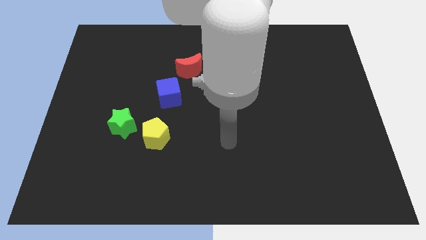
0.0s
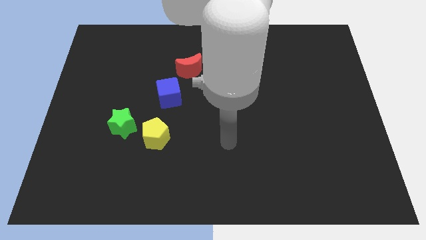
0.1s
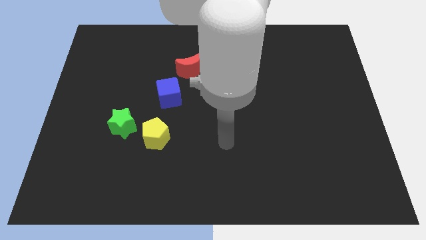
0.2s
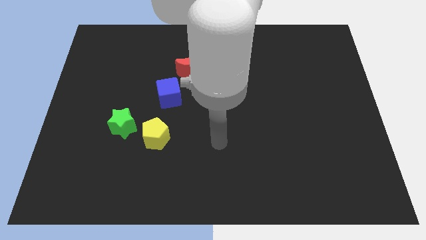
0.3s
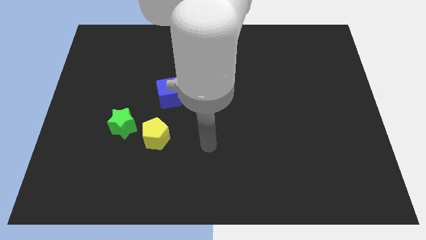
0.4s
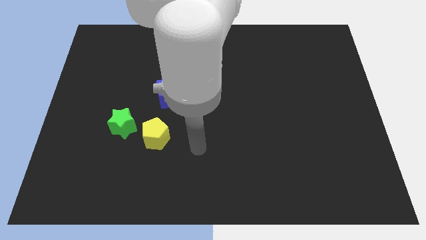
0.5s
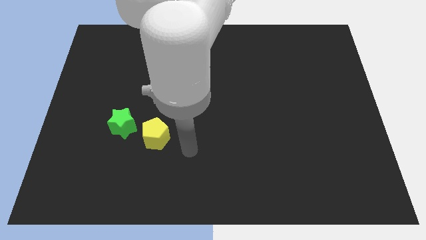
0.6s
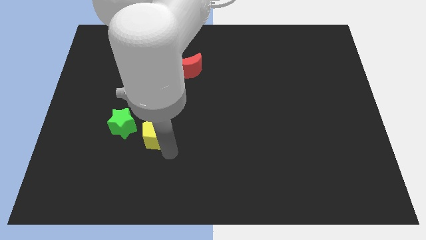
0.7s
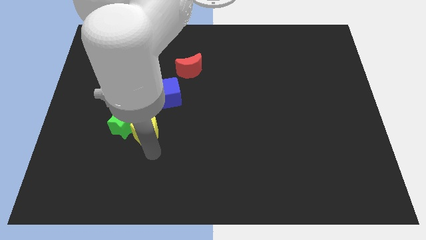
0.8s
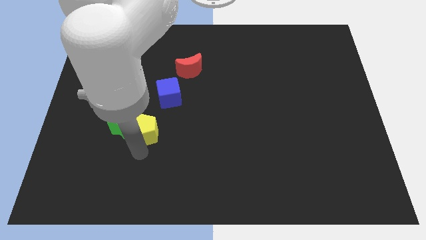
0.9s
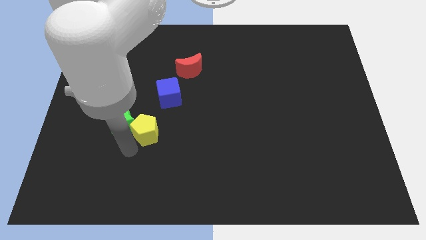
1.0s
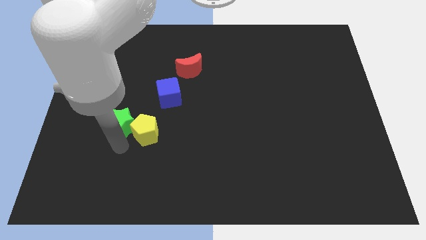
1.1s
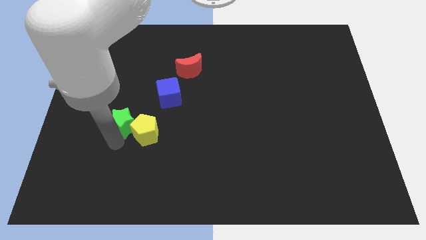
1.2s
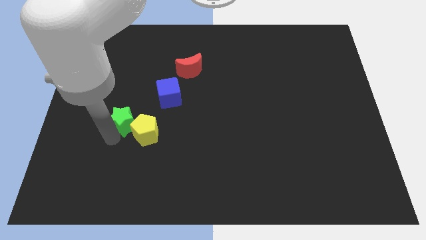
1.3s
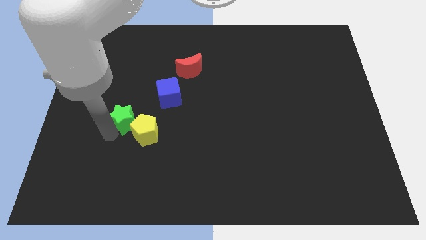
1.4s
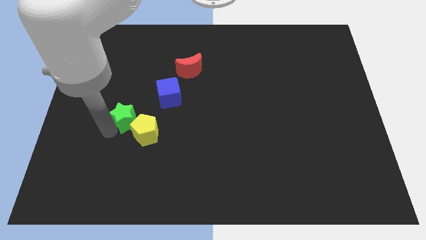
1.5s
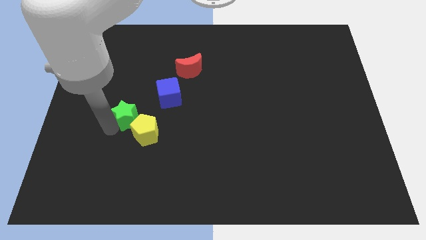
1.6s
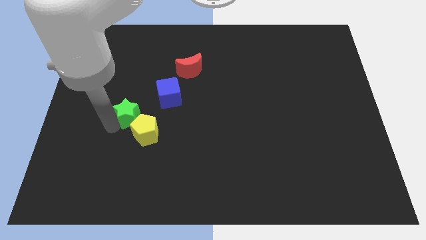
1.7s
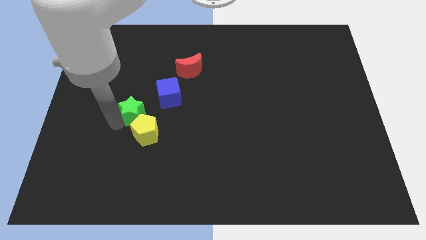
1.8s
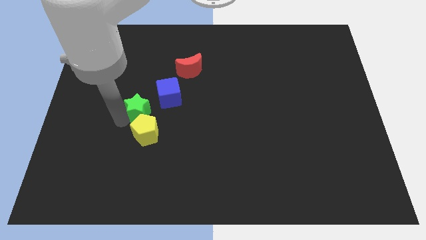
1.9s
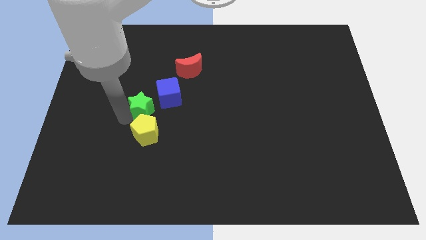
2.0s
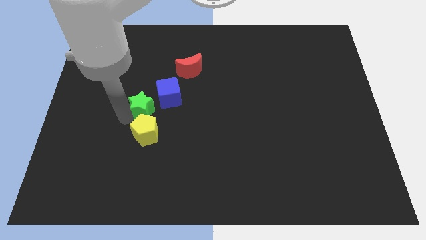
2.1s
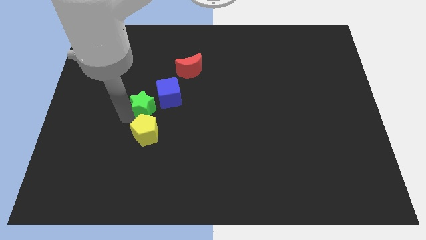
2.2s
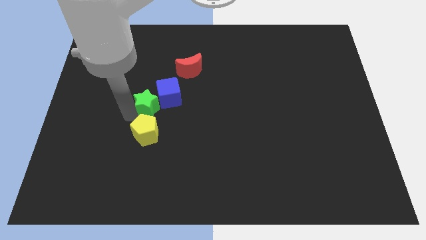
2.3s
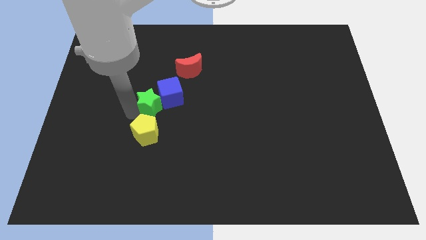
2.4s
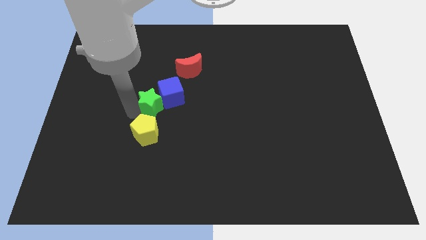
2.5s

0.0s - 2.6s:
slide the green star towards the cube

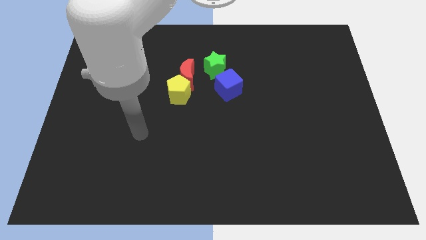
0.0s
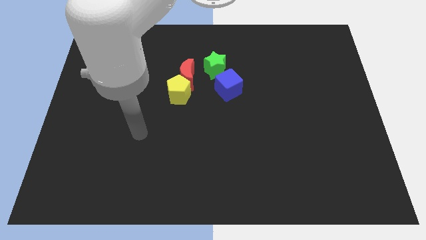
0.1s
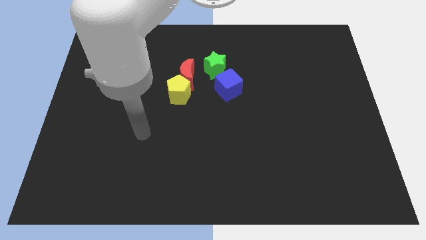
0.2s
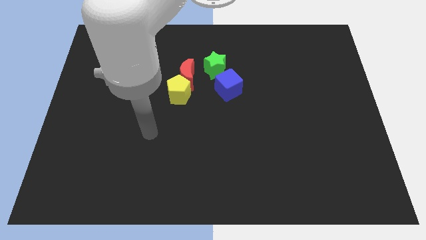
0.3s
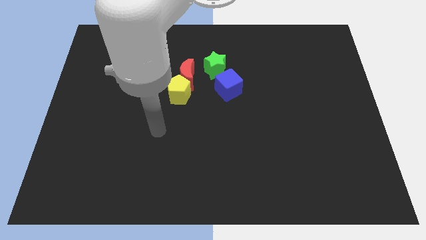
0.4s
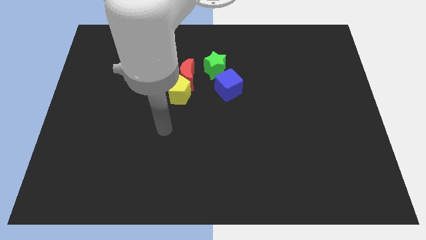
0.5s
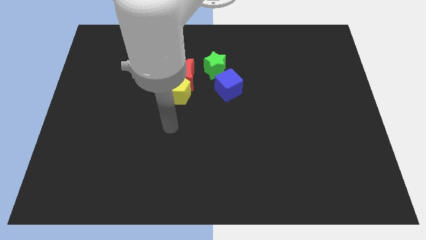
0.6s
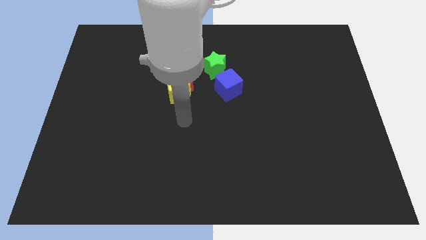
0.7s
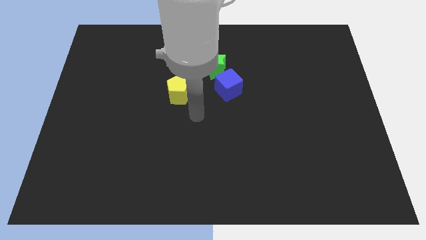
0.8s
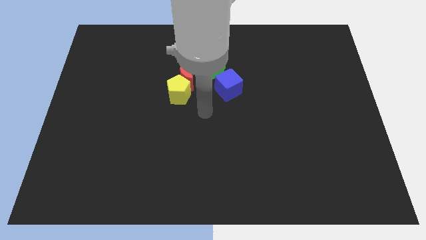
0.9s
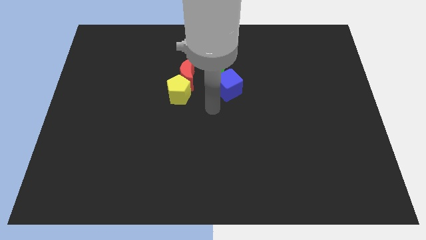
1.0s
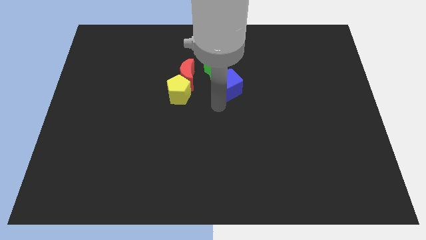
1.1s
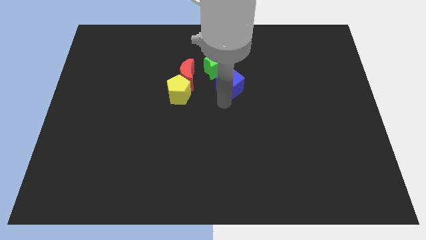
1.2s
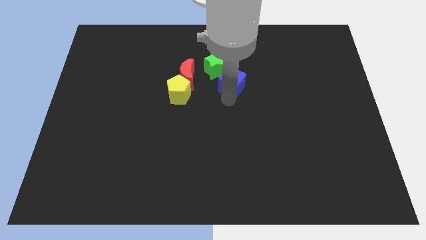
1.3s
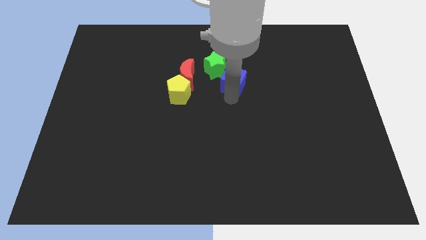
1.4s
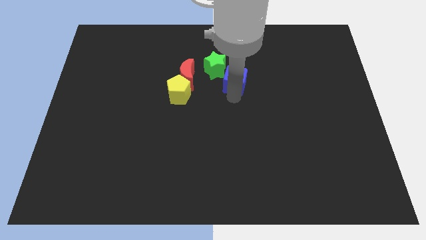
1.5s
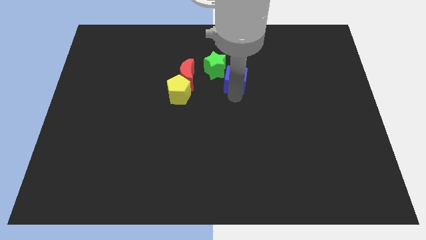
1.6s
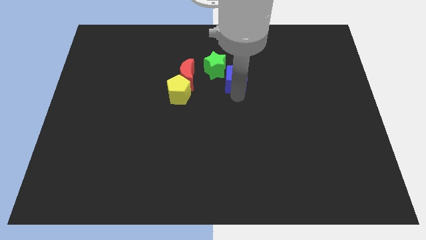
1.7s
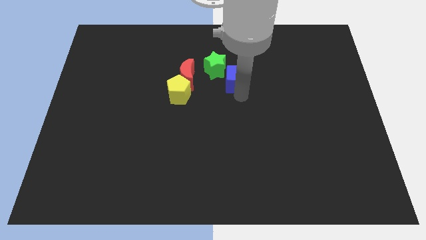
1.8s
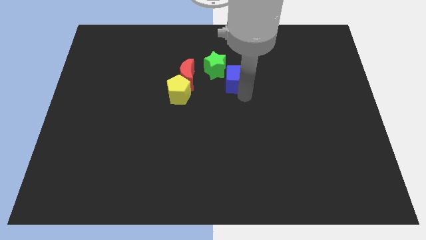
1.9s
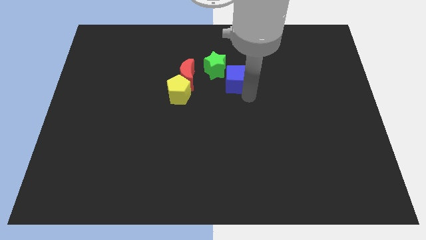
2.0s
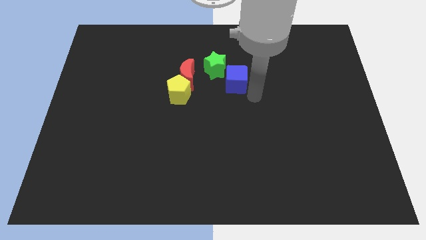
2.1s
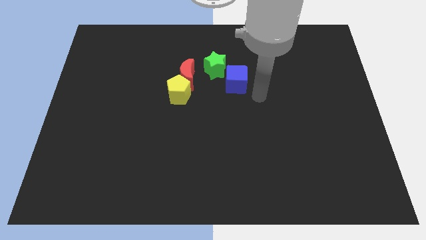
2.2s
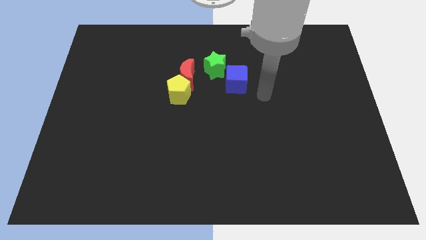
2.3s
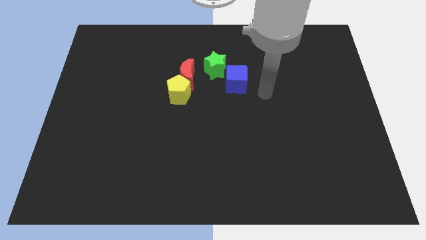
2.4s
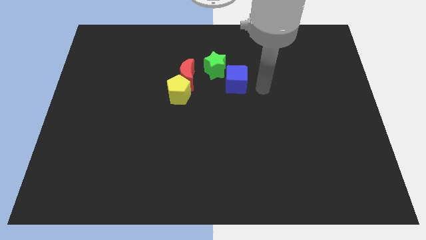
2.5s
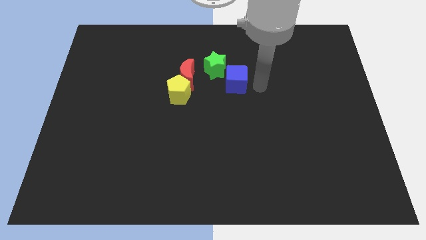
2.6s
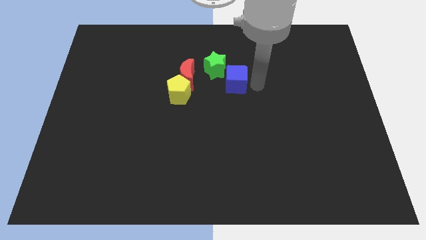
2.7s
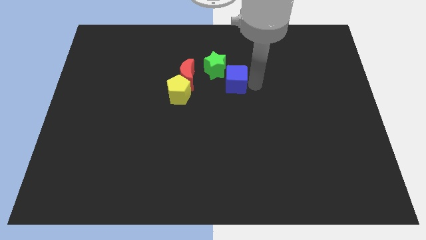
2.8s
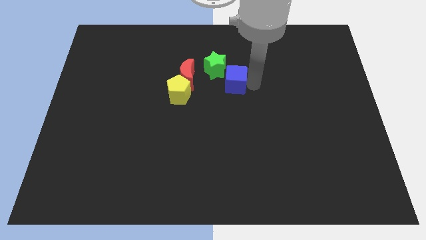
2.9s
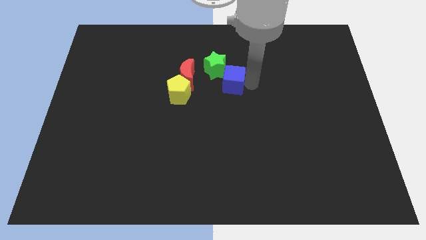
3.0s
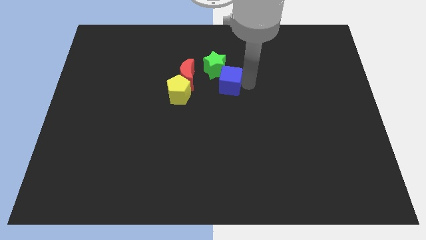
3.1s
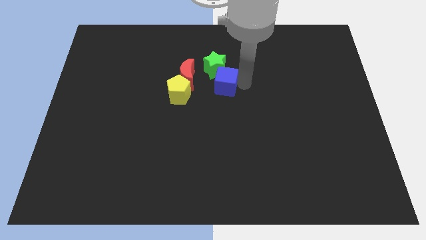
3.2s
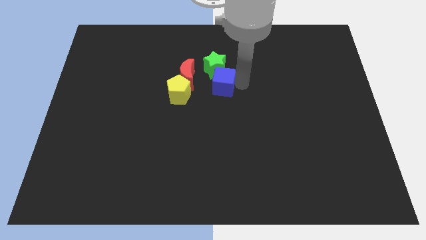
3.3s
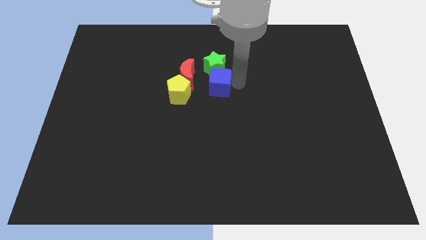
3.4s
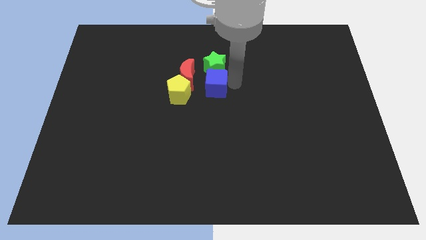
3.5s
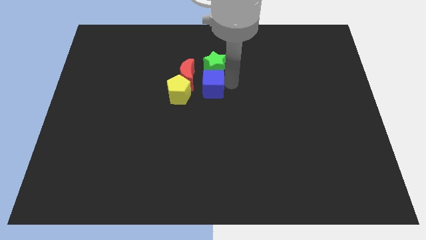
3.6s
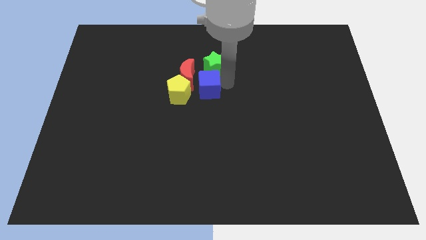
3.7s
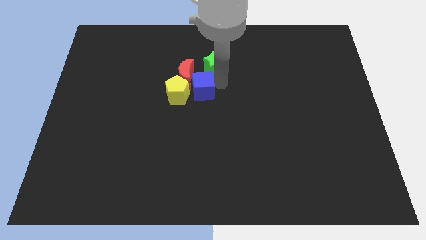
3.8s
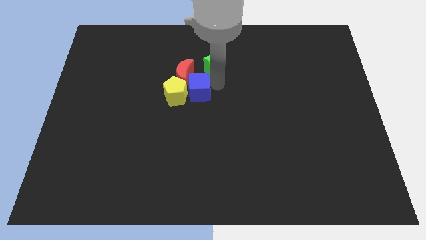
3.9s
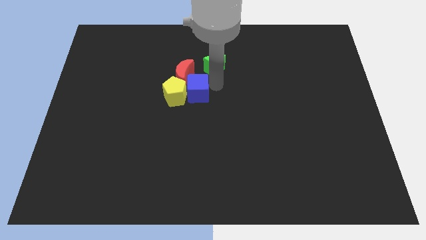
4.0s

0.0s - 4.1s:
move the blue block close to the red moon

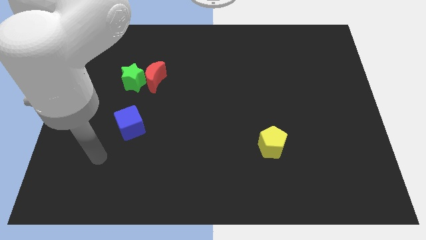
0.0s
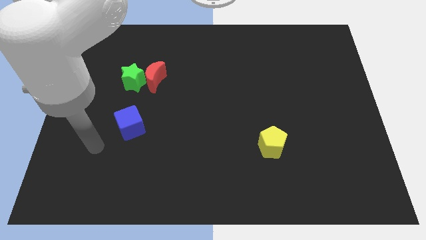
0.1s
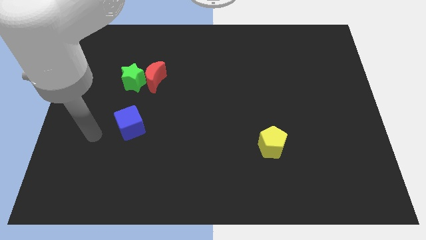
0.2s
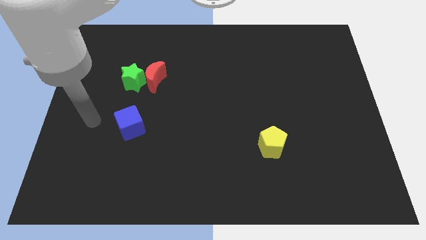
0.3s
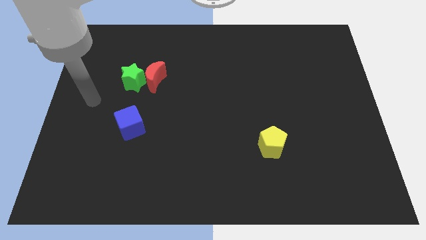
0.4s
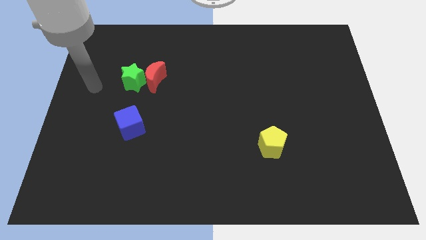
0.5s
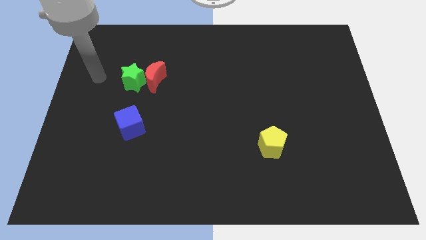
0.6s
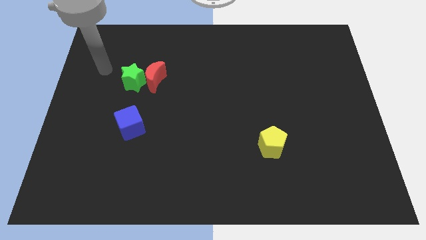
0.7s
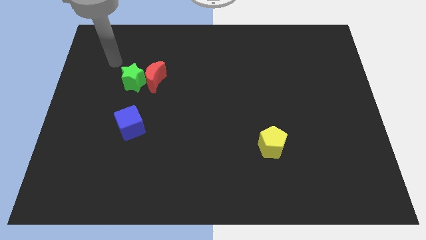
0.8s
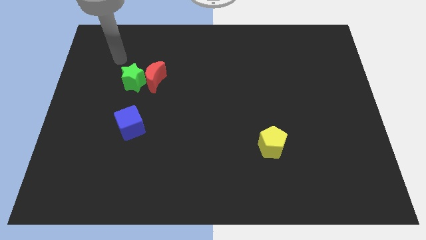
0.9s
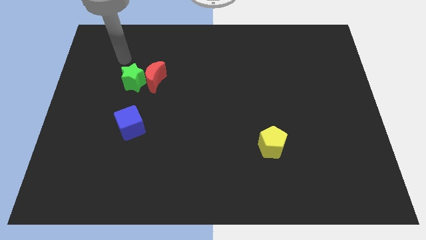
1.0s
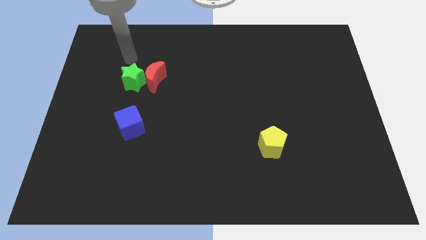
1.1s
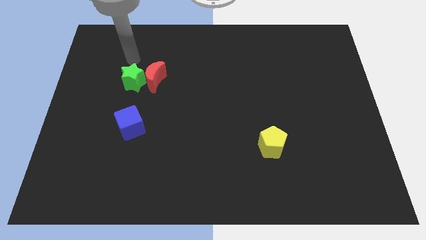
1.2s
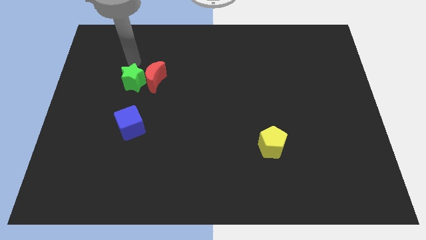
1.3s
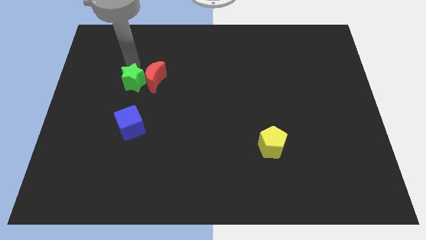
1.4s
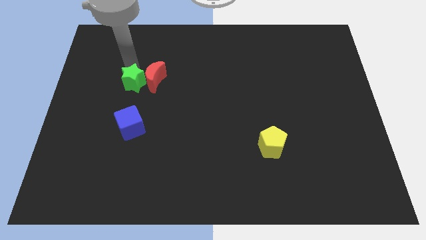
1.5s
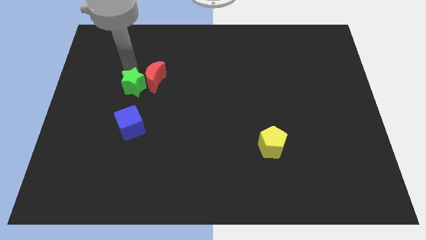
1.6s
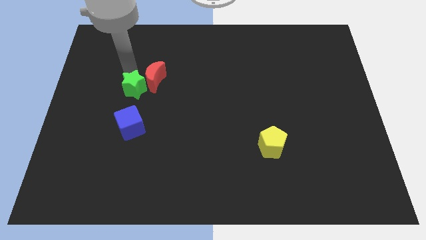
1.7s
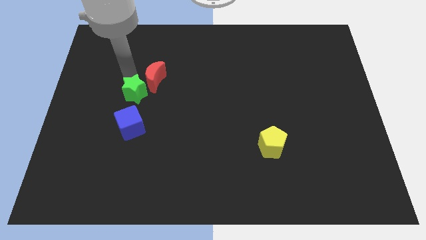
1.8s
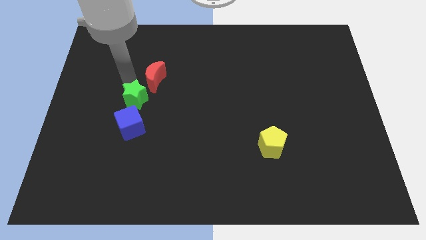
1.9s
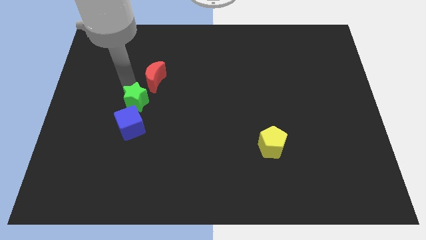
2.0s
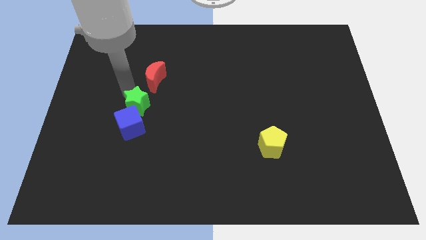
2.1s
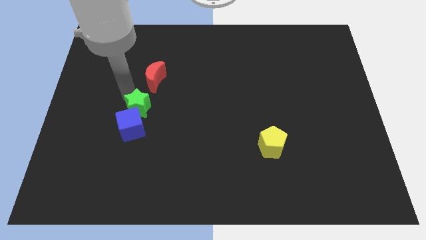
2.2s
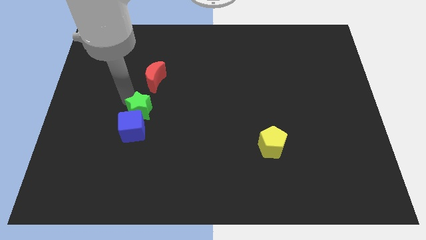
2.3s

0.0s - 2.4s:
push the green block towards the cube
